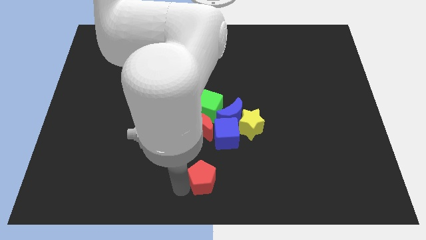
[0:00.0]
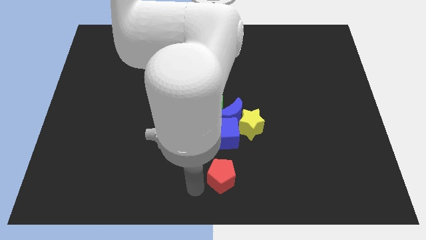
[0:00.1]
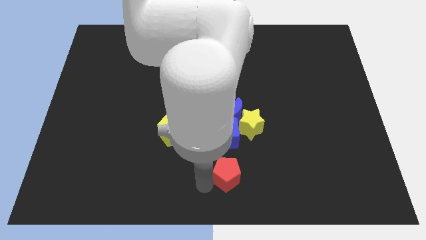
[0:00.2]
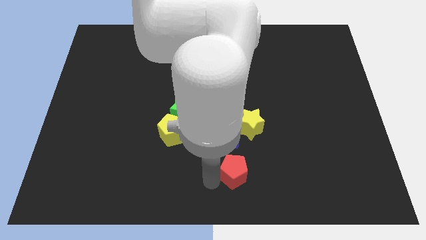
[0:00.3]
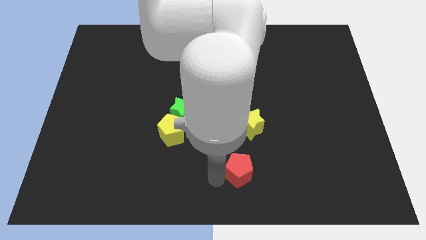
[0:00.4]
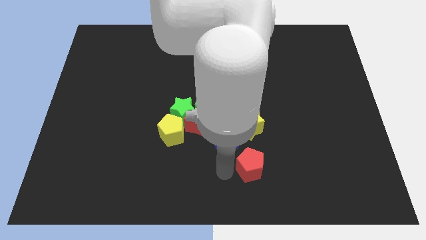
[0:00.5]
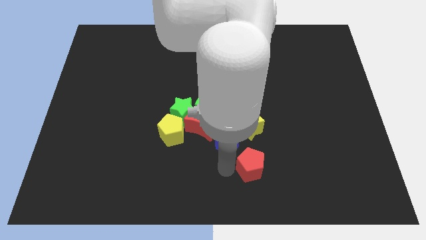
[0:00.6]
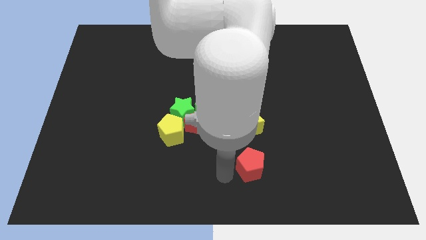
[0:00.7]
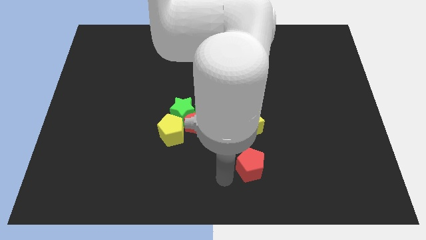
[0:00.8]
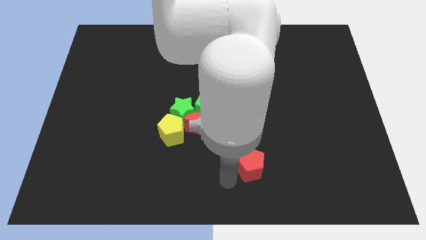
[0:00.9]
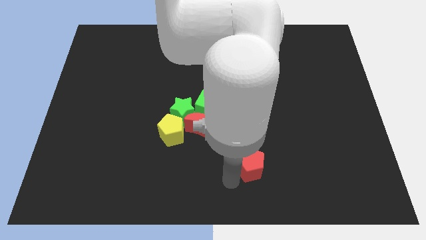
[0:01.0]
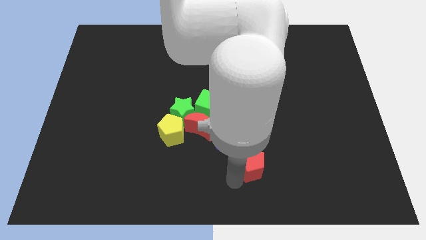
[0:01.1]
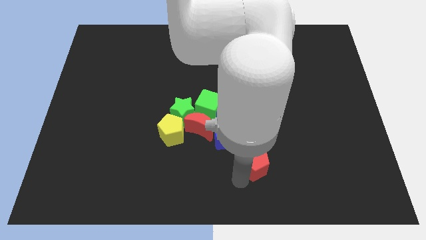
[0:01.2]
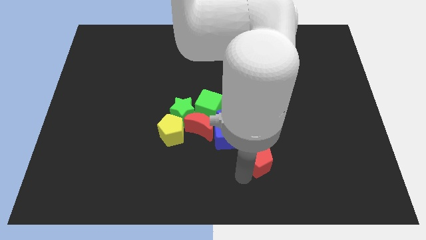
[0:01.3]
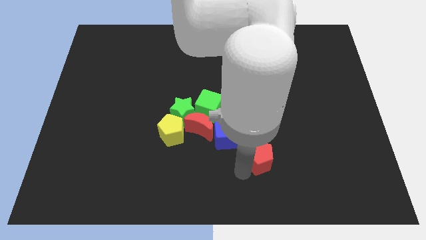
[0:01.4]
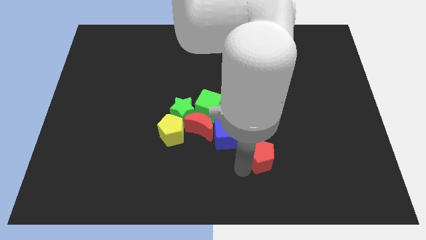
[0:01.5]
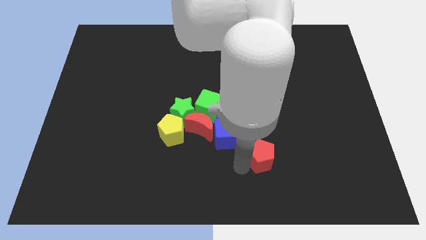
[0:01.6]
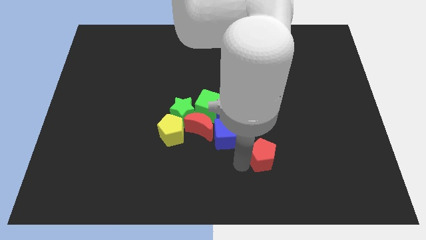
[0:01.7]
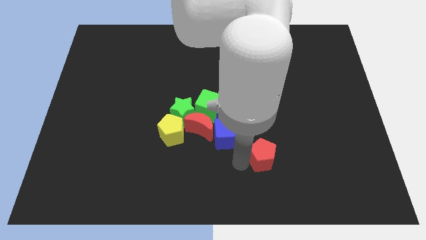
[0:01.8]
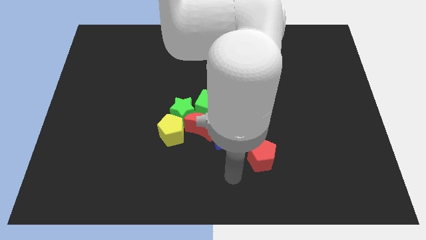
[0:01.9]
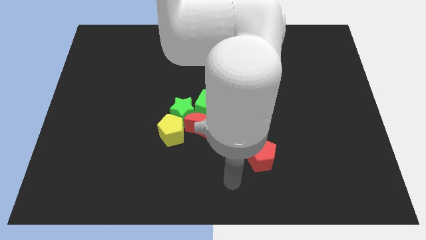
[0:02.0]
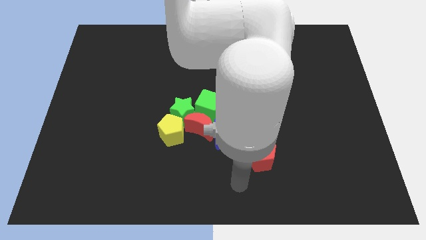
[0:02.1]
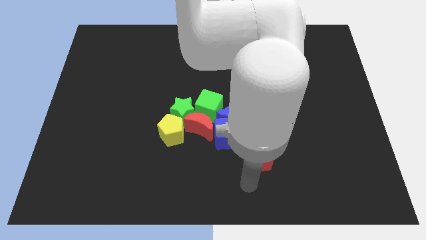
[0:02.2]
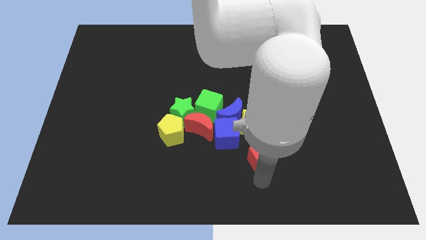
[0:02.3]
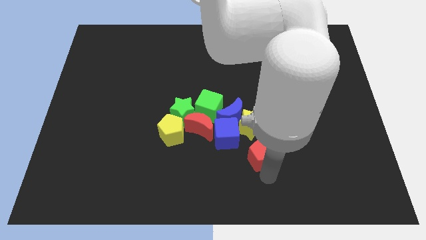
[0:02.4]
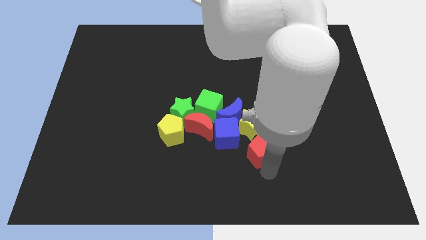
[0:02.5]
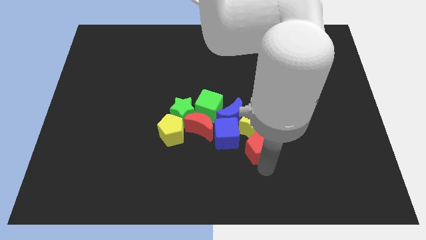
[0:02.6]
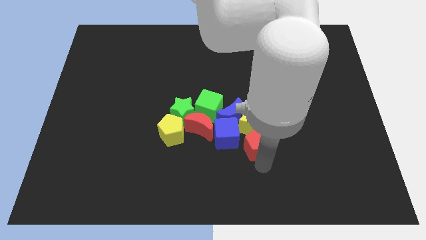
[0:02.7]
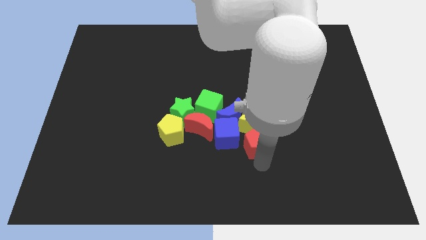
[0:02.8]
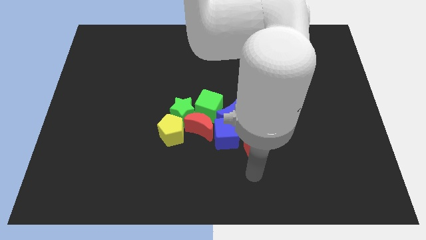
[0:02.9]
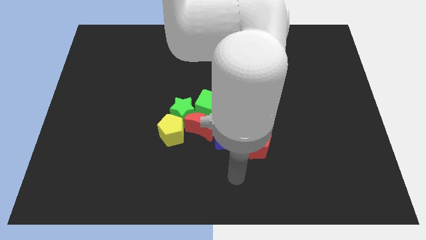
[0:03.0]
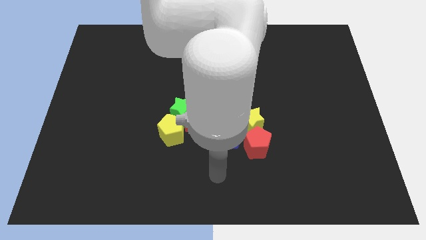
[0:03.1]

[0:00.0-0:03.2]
push the red pentagon into the yellow star

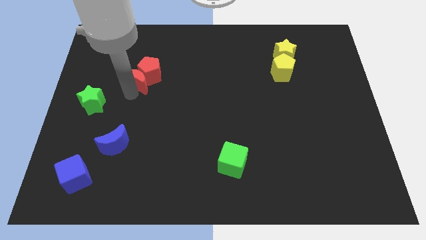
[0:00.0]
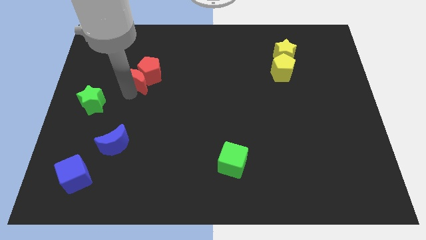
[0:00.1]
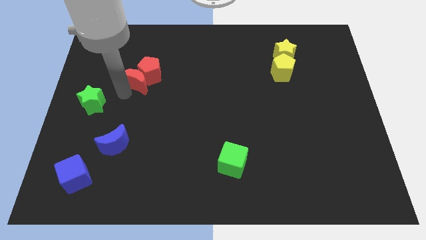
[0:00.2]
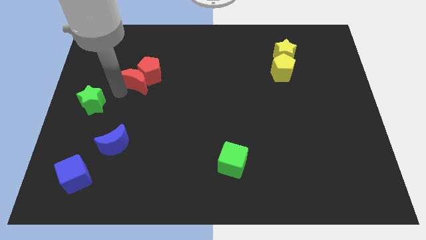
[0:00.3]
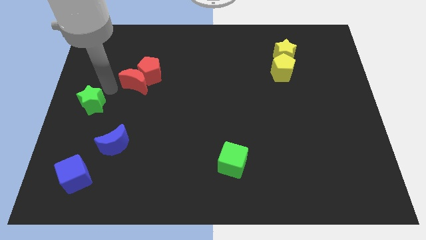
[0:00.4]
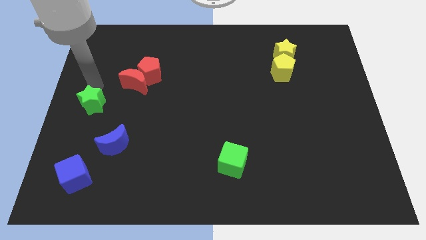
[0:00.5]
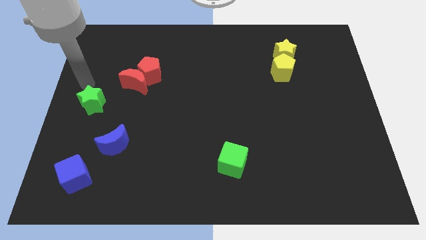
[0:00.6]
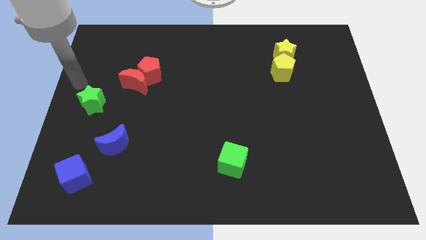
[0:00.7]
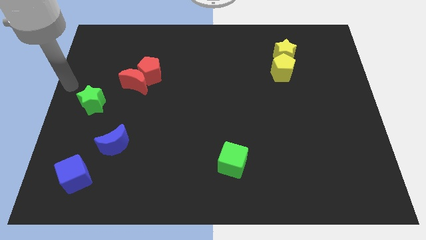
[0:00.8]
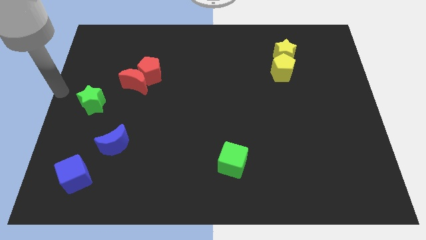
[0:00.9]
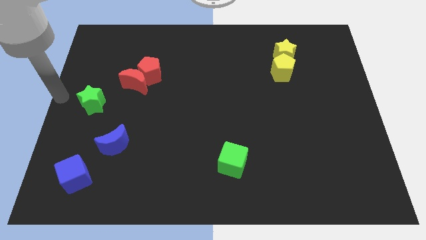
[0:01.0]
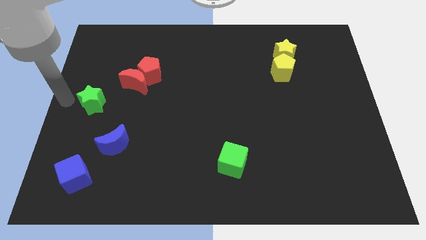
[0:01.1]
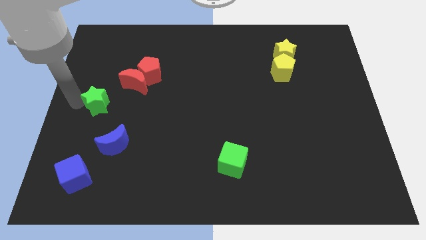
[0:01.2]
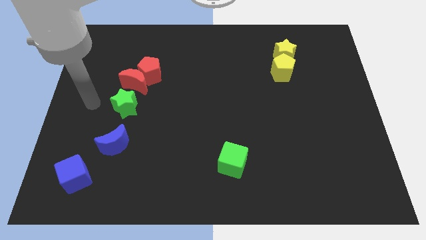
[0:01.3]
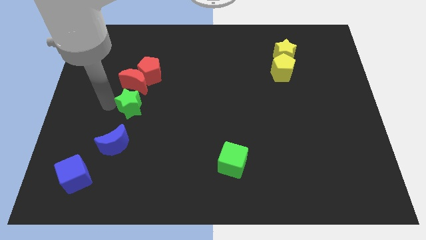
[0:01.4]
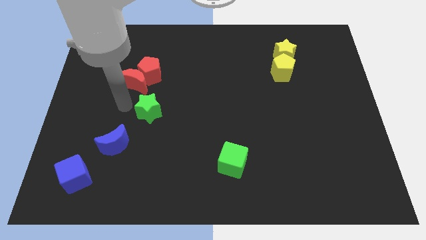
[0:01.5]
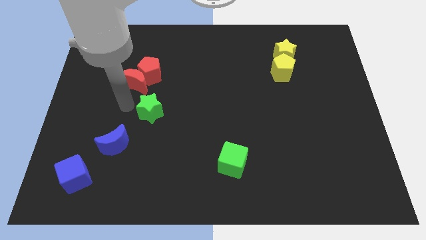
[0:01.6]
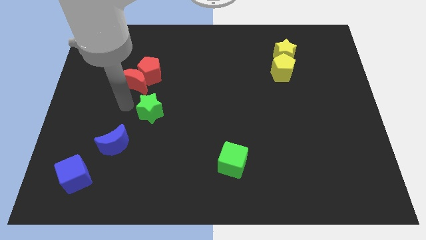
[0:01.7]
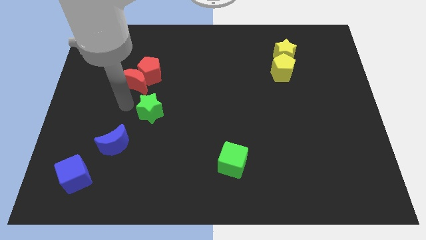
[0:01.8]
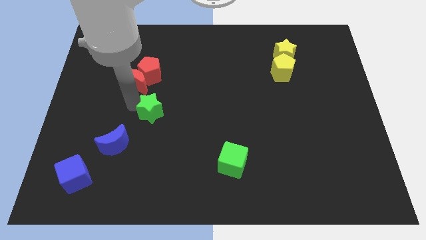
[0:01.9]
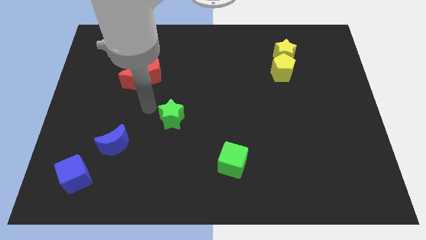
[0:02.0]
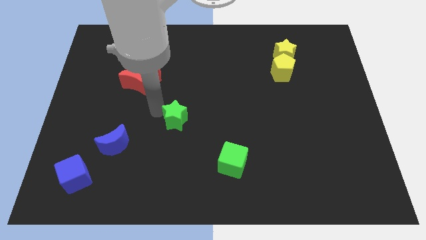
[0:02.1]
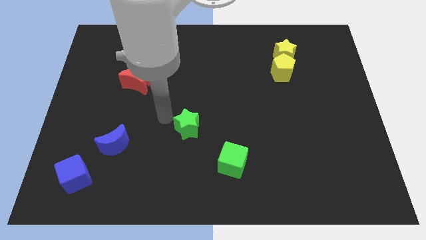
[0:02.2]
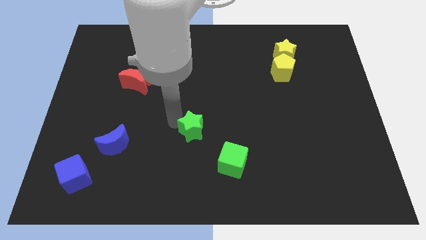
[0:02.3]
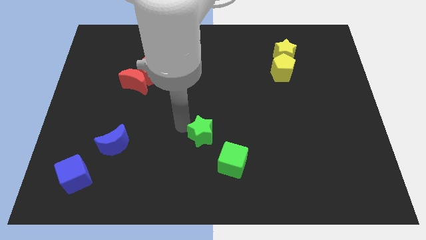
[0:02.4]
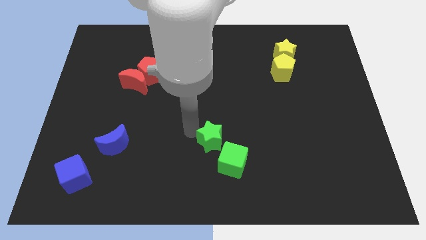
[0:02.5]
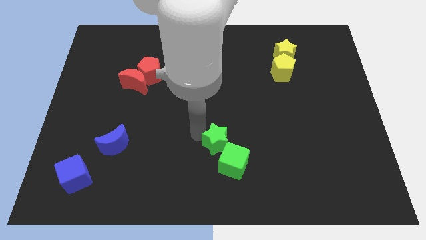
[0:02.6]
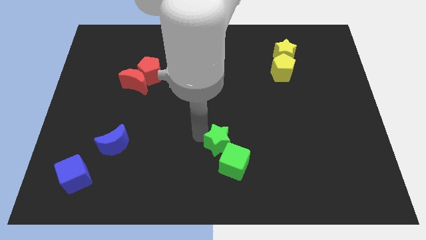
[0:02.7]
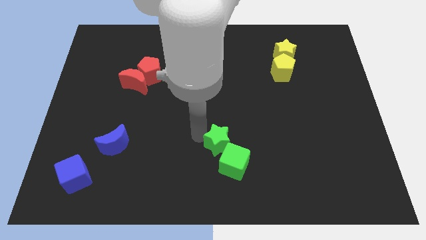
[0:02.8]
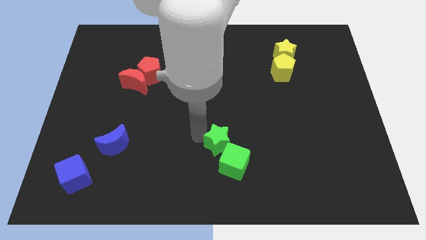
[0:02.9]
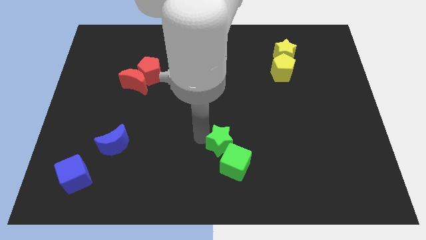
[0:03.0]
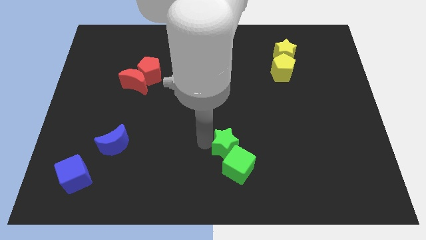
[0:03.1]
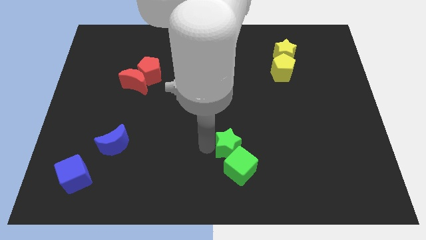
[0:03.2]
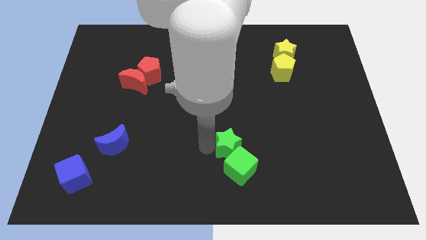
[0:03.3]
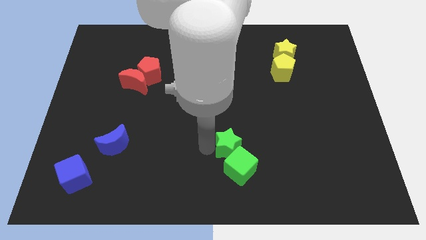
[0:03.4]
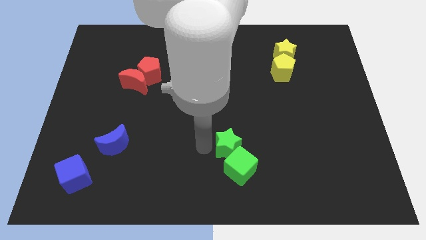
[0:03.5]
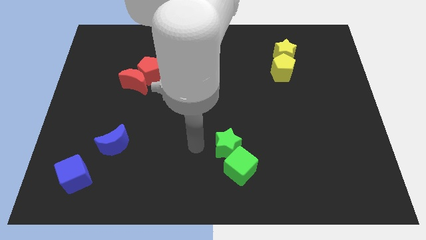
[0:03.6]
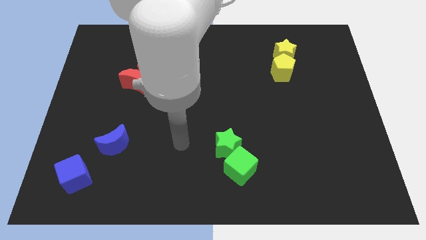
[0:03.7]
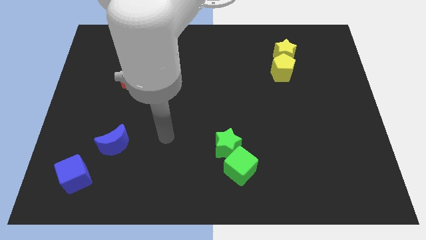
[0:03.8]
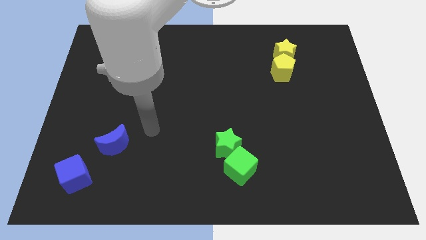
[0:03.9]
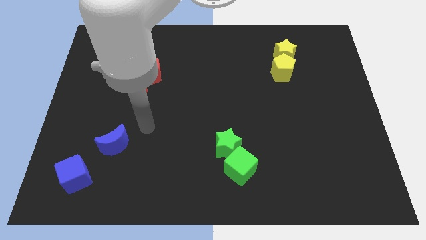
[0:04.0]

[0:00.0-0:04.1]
move green star to the top left of green cube

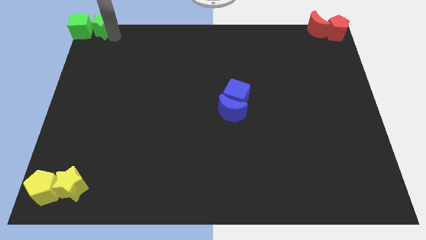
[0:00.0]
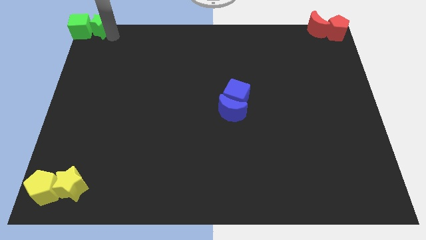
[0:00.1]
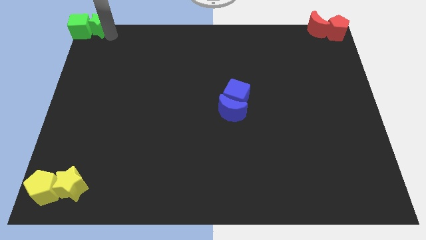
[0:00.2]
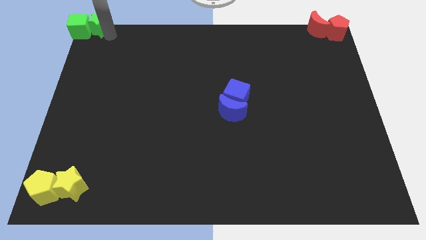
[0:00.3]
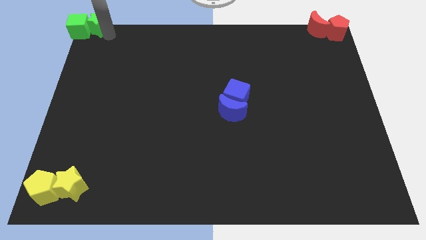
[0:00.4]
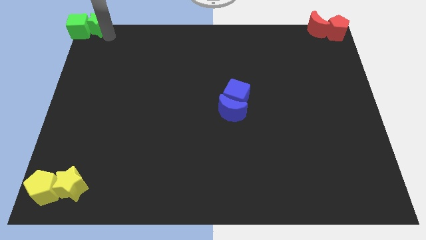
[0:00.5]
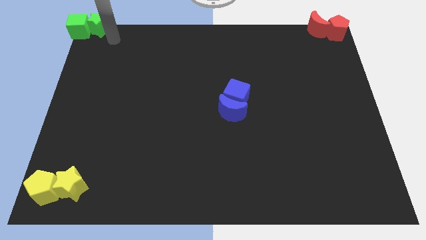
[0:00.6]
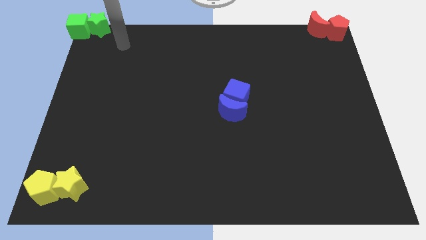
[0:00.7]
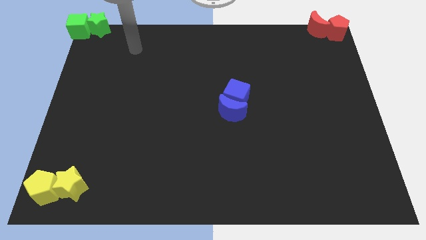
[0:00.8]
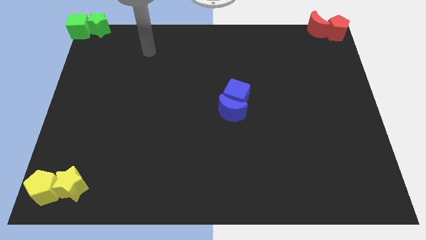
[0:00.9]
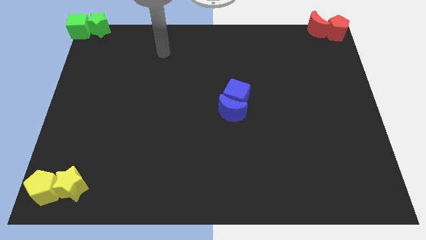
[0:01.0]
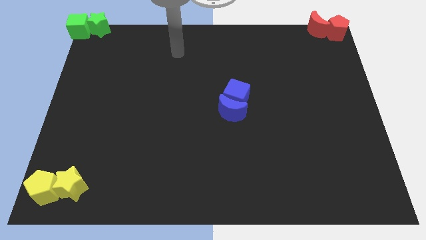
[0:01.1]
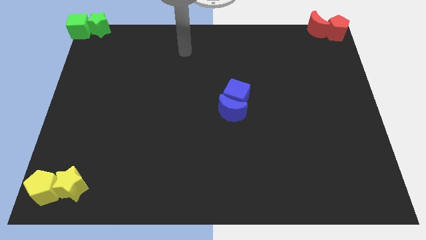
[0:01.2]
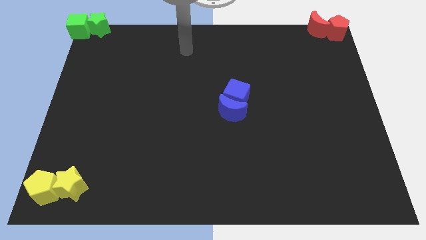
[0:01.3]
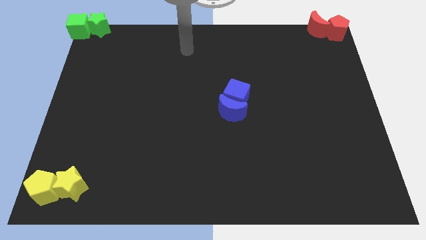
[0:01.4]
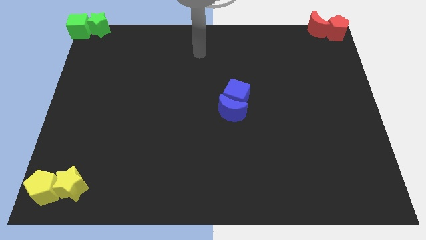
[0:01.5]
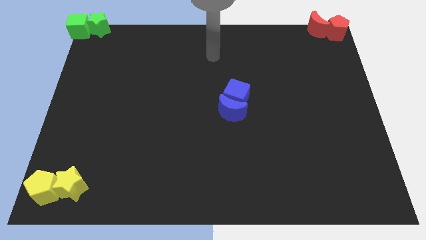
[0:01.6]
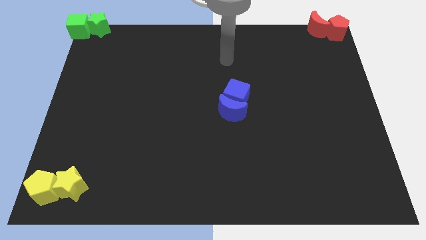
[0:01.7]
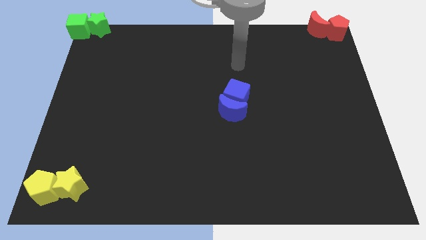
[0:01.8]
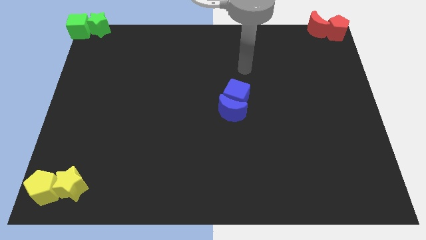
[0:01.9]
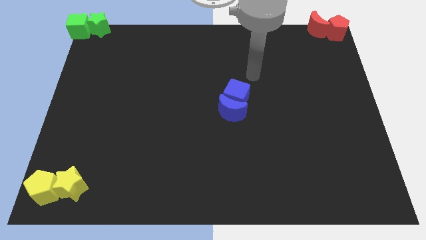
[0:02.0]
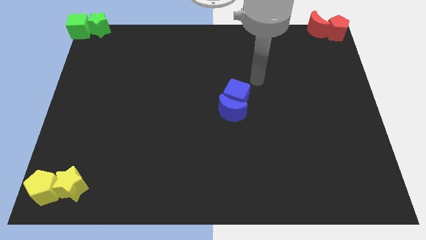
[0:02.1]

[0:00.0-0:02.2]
move the green star to the right of the green cube
